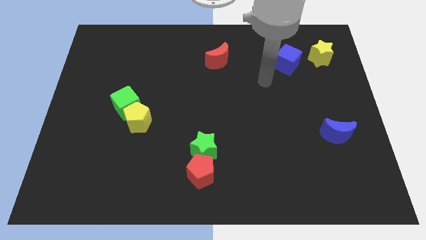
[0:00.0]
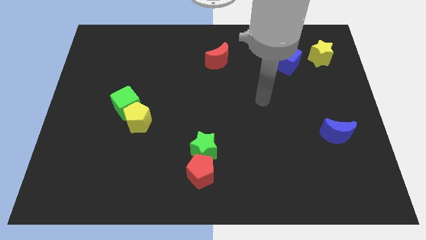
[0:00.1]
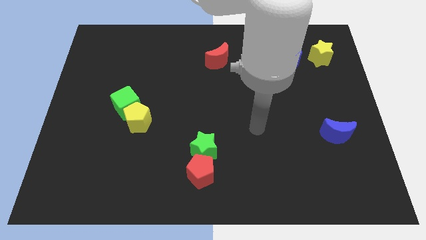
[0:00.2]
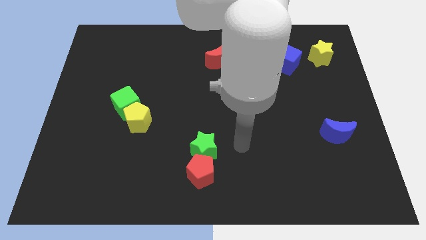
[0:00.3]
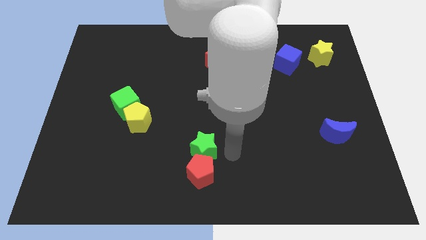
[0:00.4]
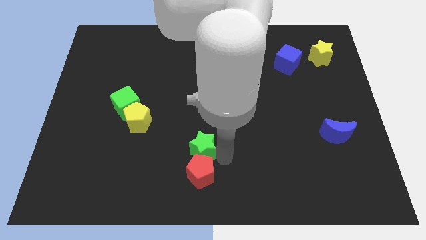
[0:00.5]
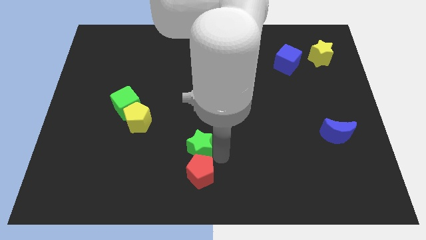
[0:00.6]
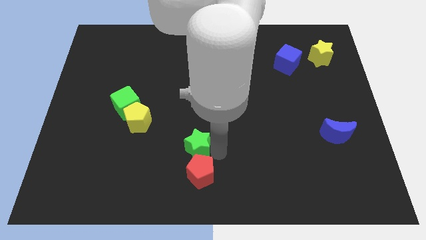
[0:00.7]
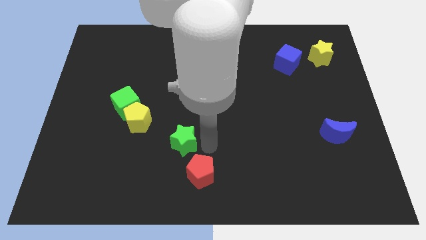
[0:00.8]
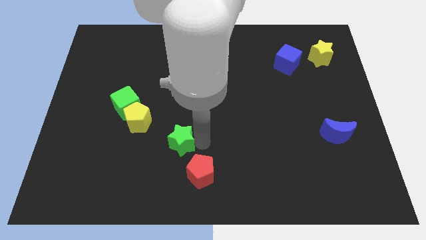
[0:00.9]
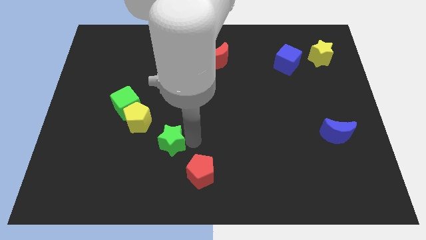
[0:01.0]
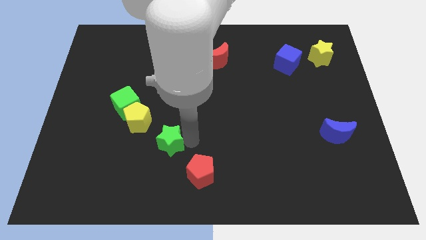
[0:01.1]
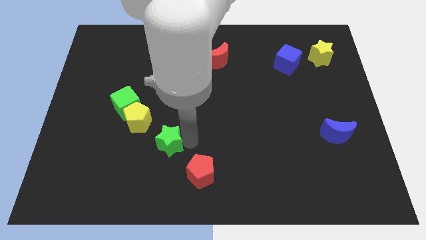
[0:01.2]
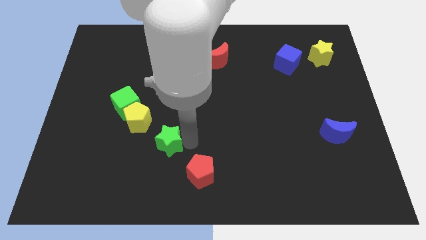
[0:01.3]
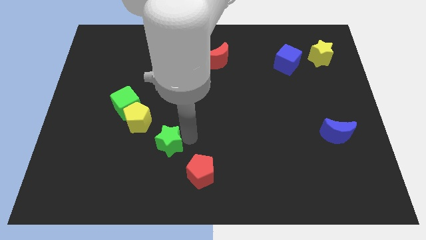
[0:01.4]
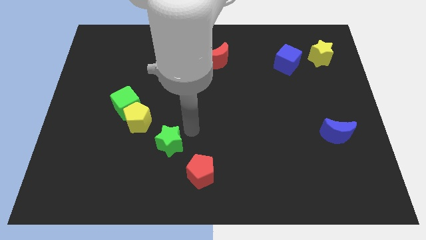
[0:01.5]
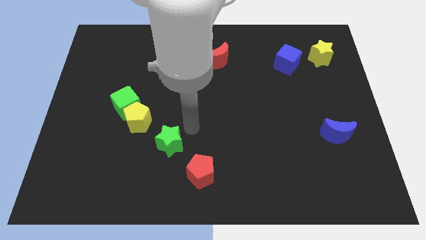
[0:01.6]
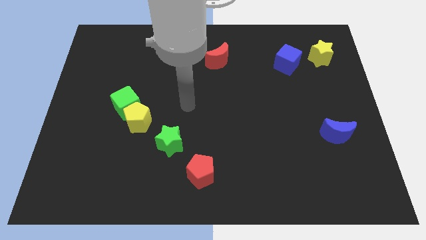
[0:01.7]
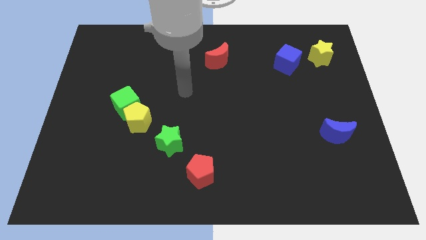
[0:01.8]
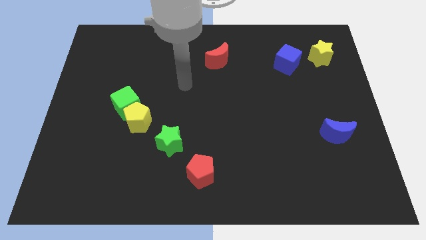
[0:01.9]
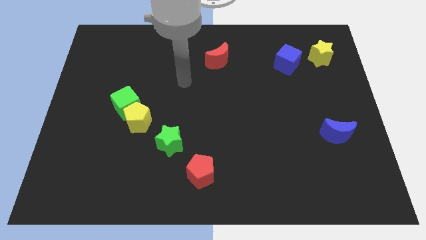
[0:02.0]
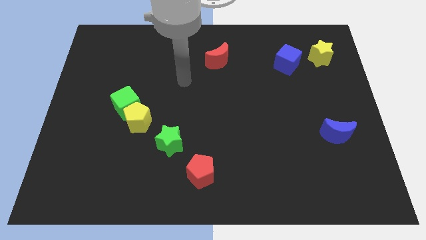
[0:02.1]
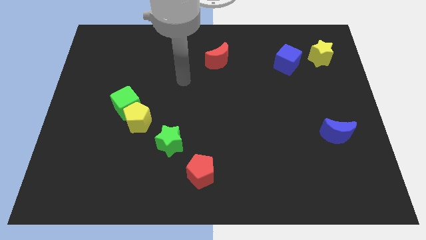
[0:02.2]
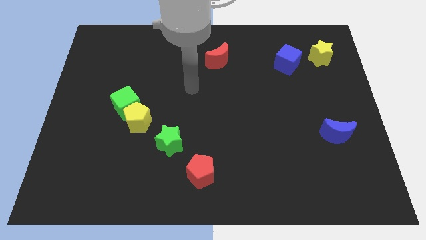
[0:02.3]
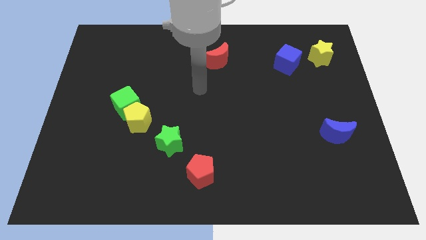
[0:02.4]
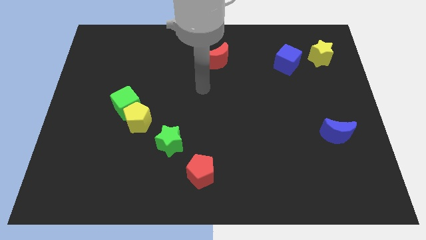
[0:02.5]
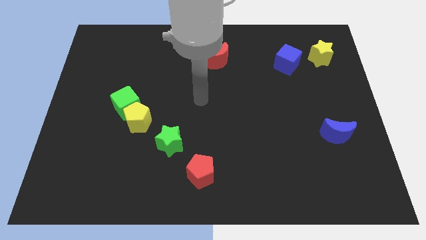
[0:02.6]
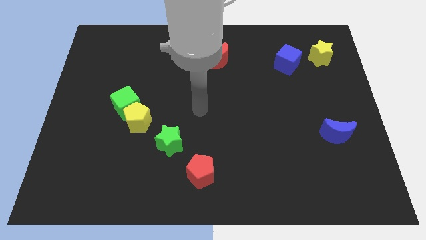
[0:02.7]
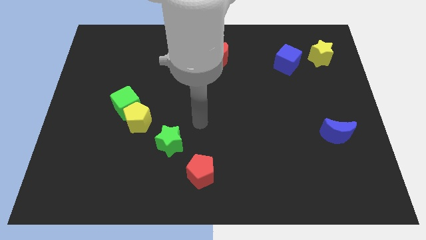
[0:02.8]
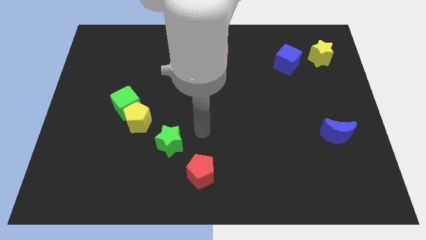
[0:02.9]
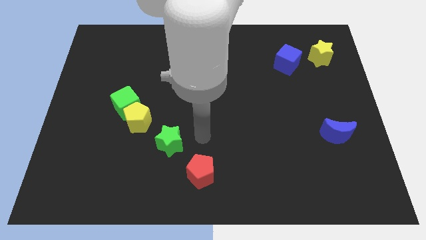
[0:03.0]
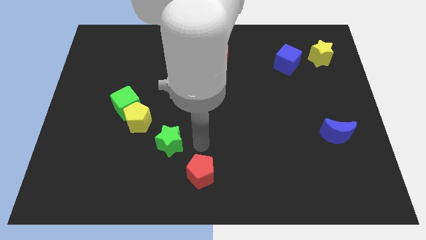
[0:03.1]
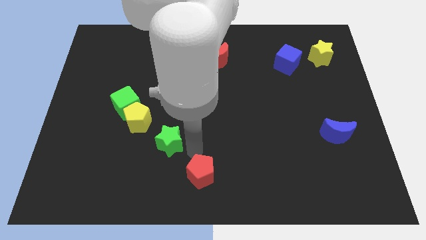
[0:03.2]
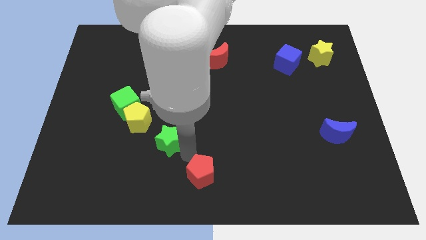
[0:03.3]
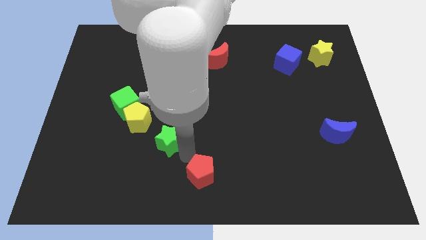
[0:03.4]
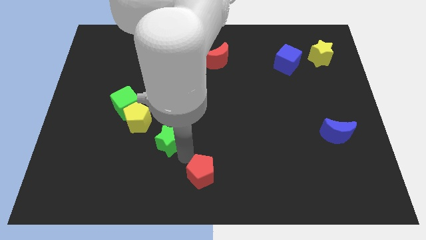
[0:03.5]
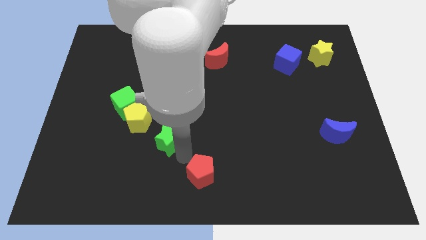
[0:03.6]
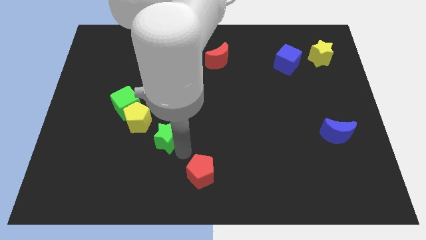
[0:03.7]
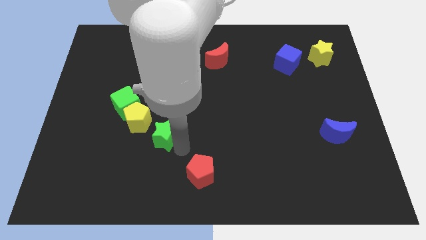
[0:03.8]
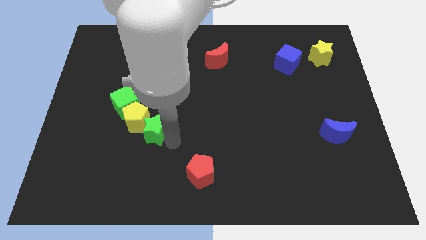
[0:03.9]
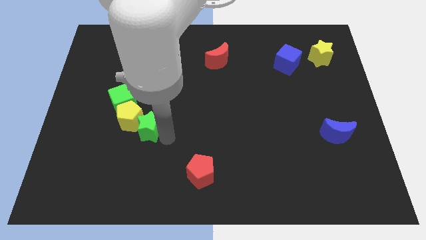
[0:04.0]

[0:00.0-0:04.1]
put the green star close to the yellow pentagon

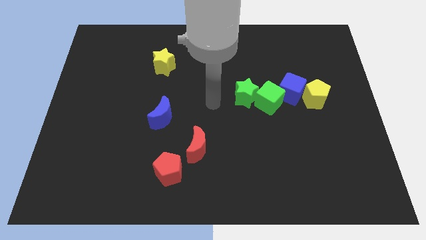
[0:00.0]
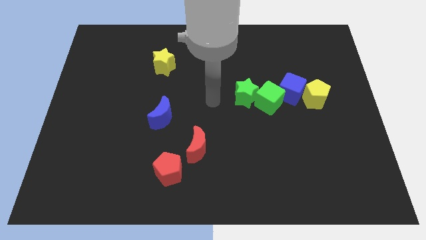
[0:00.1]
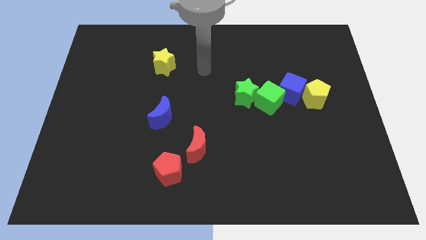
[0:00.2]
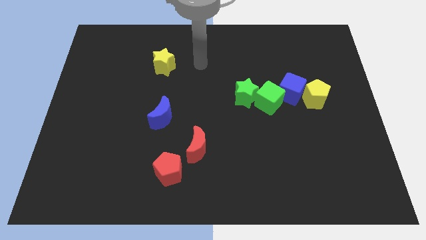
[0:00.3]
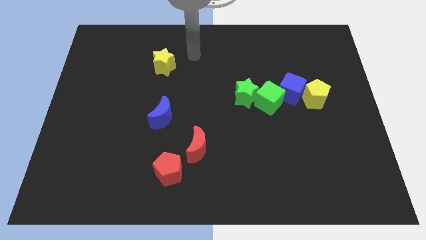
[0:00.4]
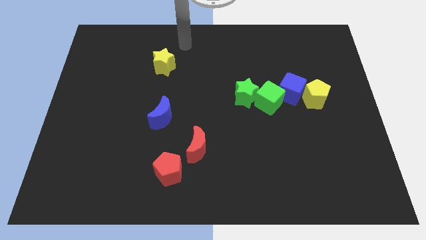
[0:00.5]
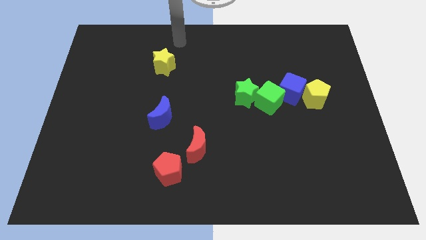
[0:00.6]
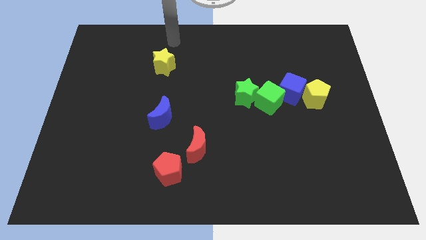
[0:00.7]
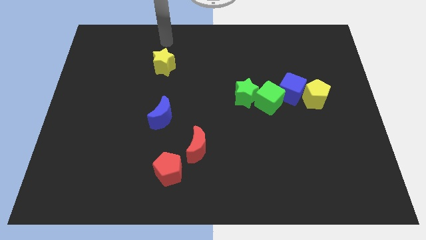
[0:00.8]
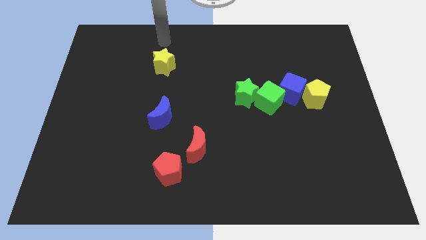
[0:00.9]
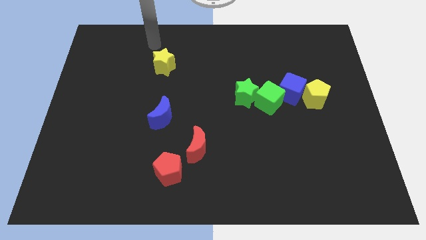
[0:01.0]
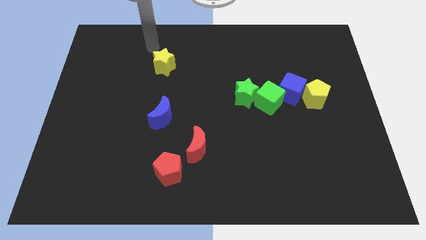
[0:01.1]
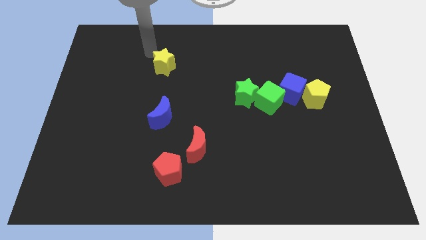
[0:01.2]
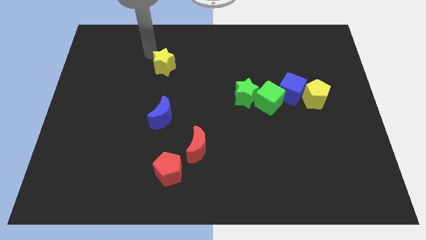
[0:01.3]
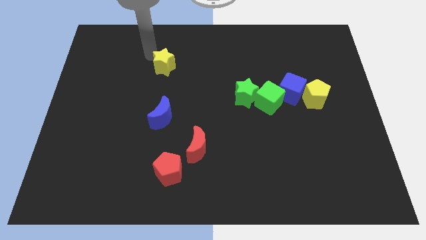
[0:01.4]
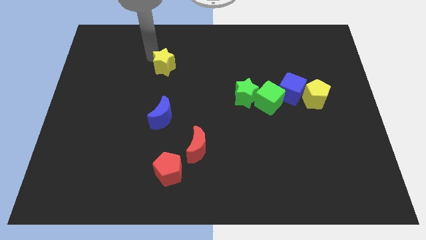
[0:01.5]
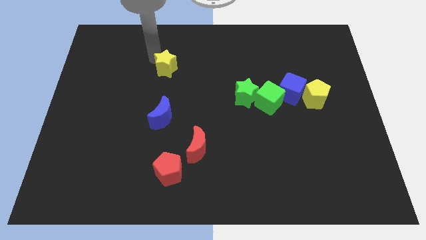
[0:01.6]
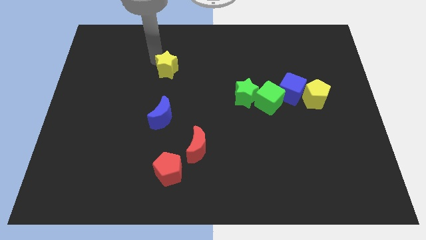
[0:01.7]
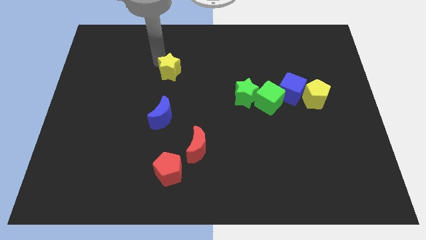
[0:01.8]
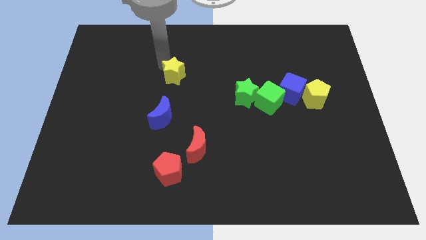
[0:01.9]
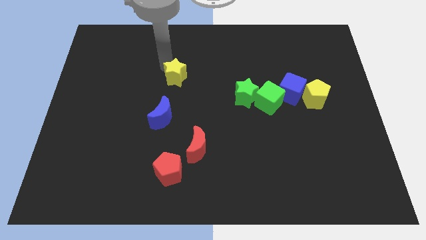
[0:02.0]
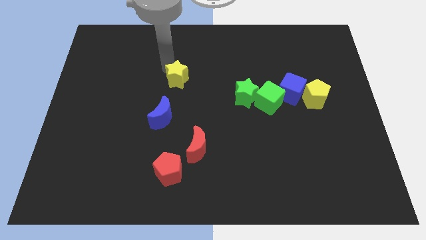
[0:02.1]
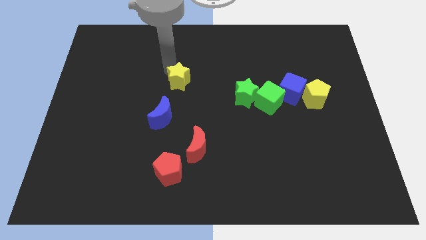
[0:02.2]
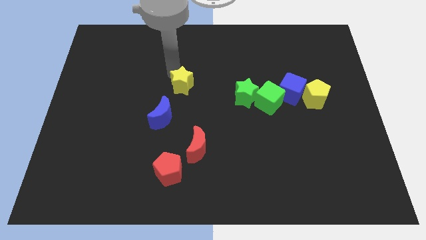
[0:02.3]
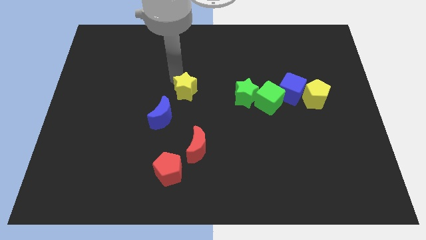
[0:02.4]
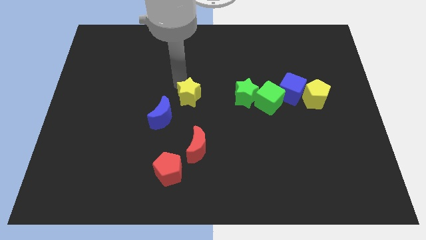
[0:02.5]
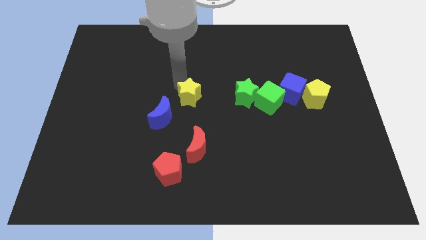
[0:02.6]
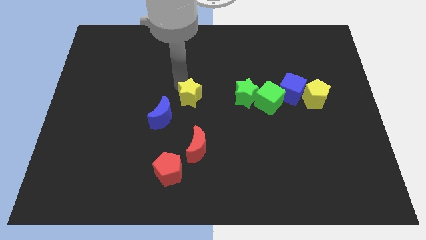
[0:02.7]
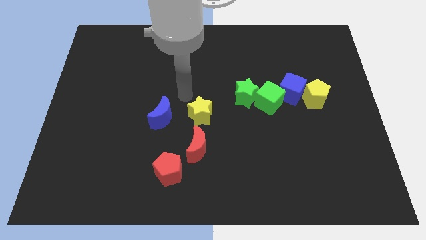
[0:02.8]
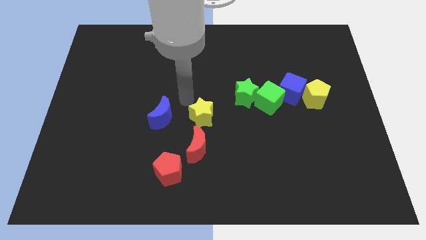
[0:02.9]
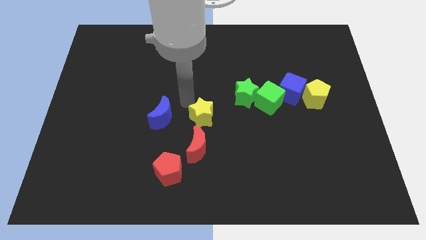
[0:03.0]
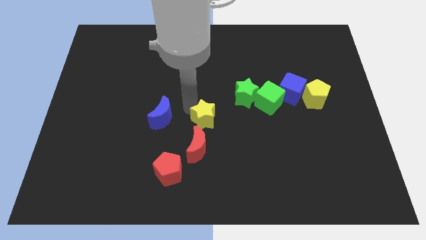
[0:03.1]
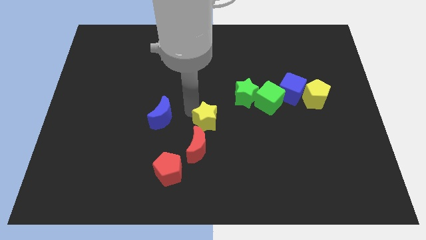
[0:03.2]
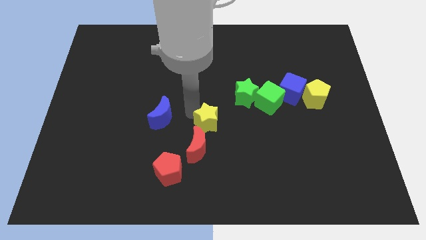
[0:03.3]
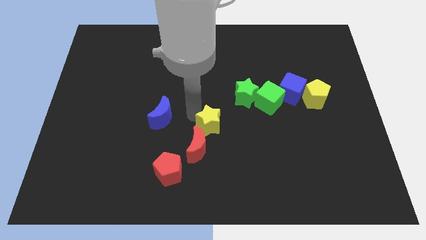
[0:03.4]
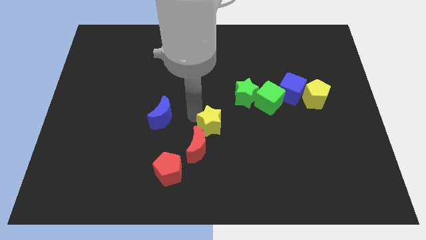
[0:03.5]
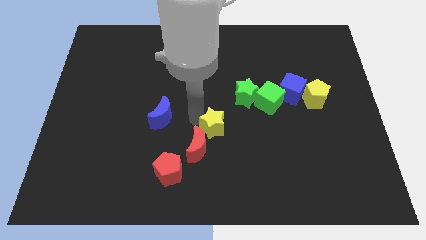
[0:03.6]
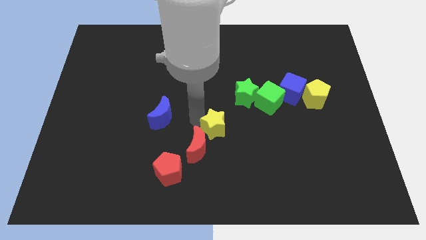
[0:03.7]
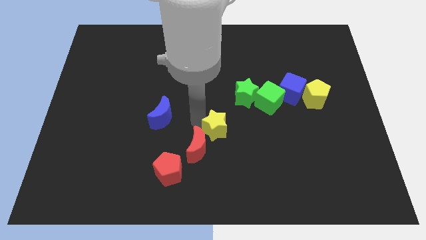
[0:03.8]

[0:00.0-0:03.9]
slide the yellow star next to the red moon

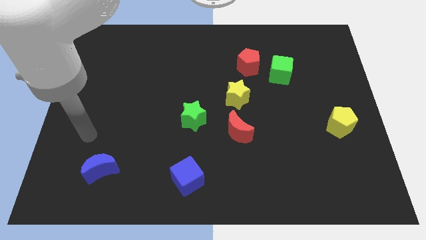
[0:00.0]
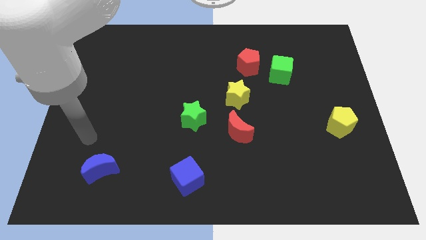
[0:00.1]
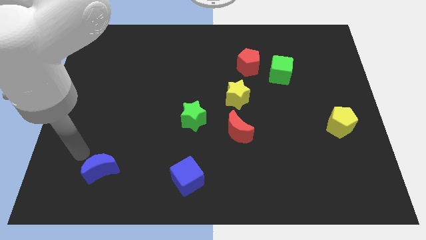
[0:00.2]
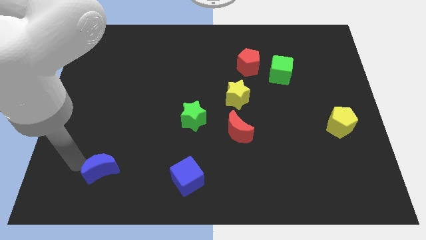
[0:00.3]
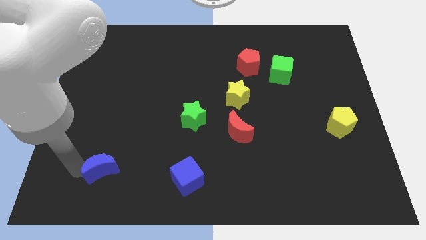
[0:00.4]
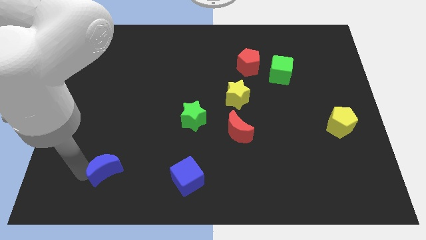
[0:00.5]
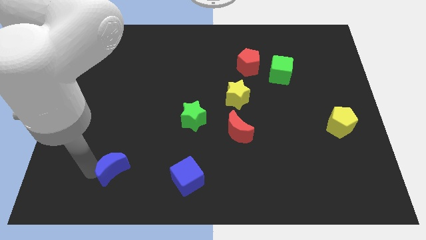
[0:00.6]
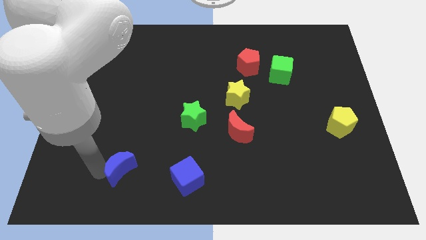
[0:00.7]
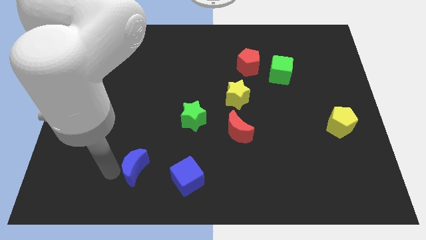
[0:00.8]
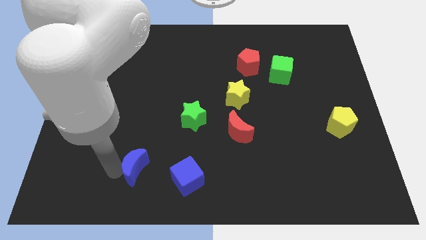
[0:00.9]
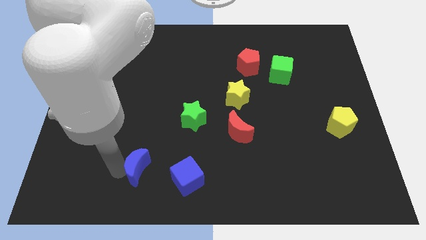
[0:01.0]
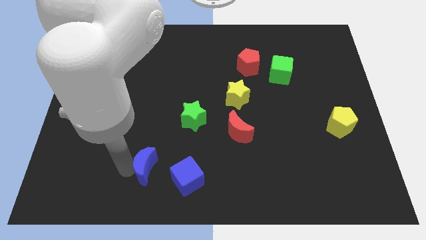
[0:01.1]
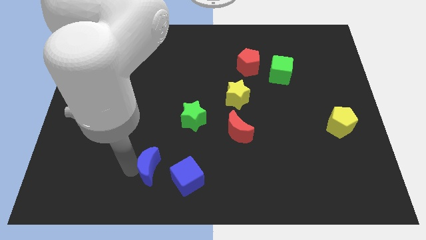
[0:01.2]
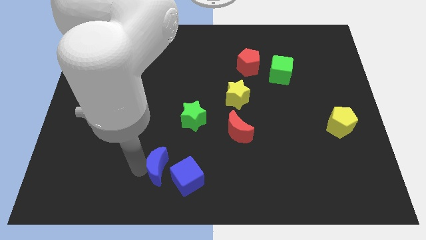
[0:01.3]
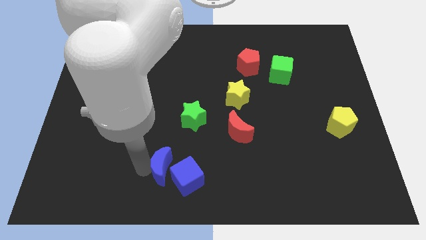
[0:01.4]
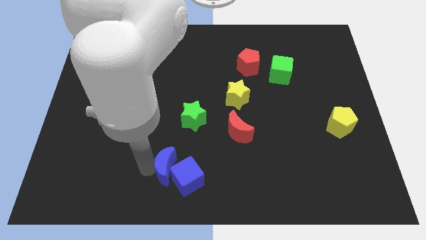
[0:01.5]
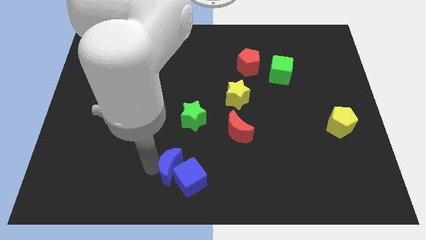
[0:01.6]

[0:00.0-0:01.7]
push the blue moon to the blue cube
